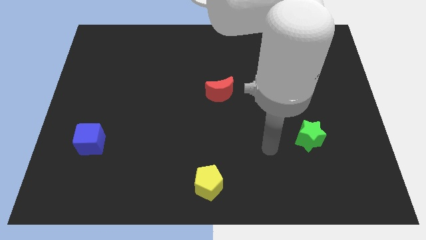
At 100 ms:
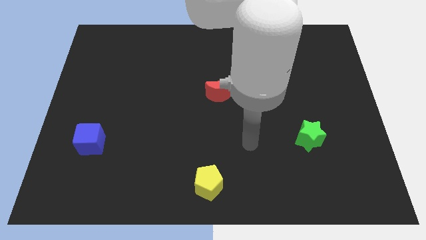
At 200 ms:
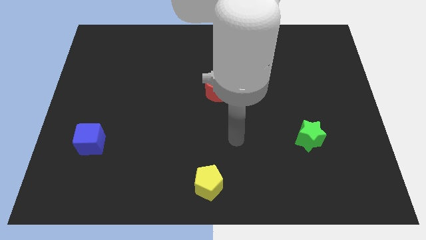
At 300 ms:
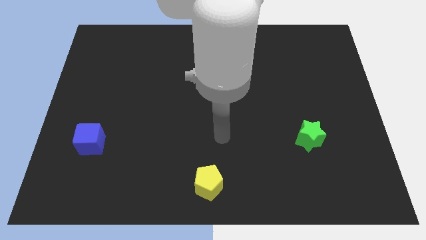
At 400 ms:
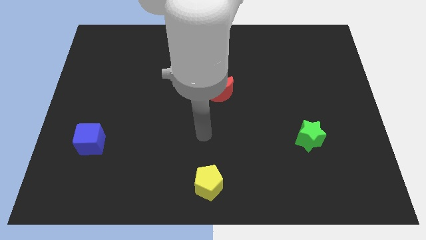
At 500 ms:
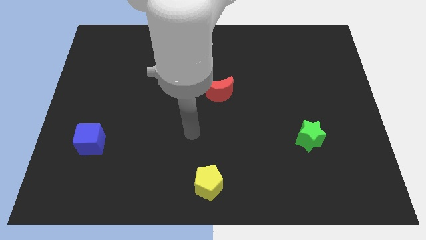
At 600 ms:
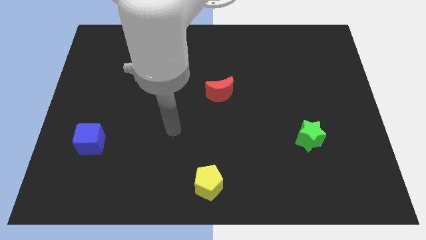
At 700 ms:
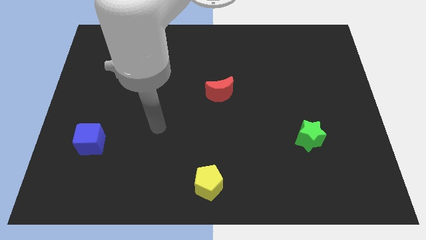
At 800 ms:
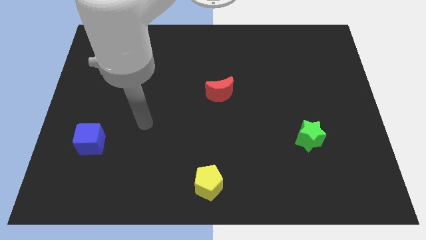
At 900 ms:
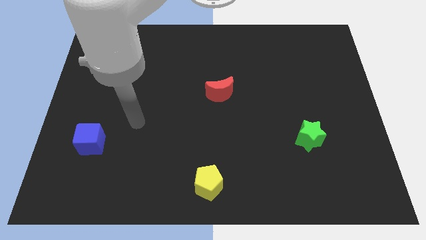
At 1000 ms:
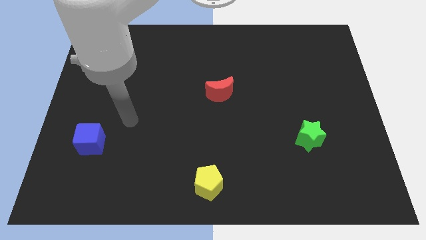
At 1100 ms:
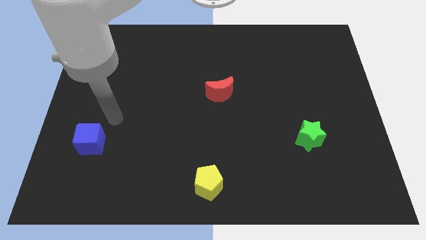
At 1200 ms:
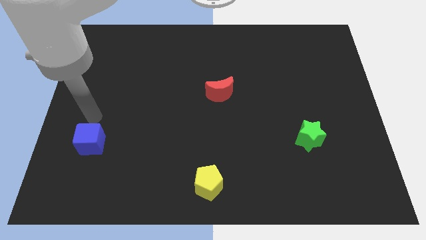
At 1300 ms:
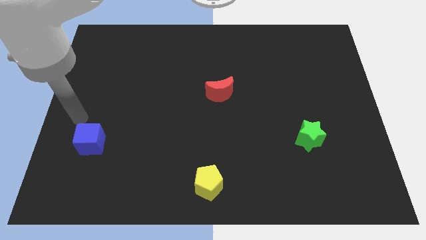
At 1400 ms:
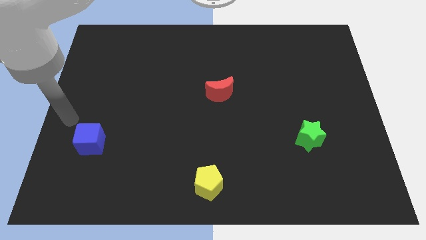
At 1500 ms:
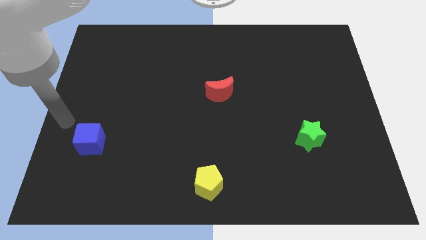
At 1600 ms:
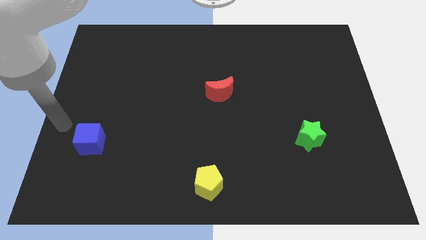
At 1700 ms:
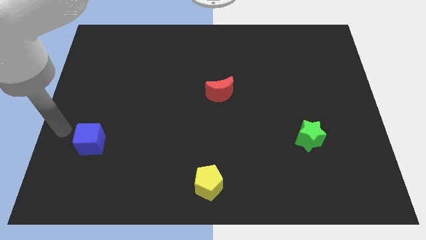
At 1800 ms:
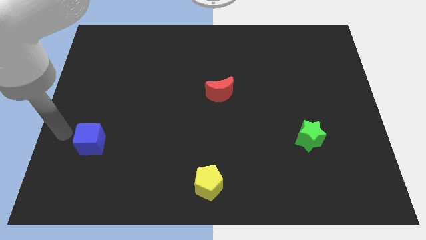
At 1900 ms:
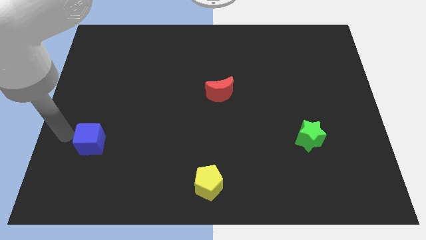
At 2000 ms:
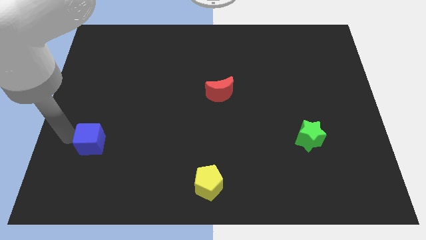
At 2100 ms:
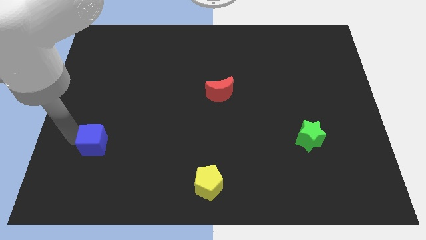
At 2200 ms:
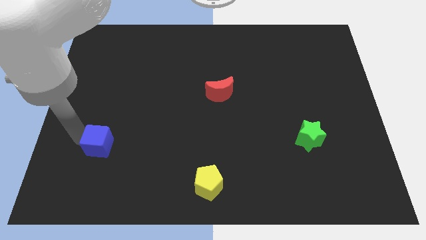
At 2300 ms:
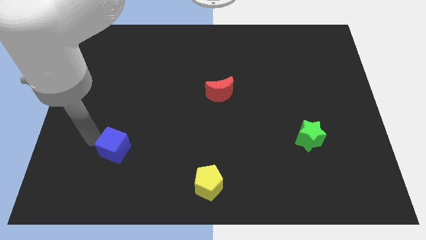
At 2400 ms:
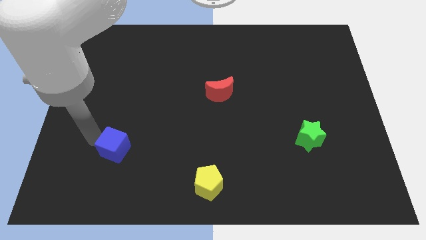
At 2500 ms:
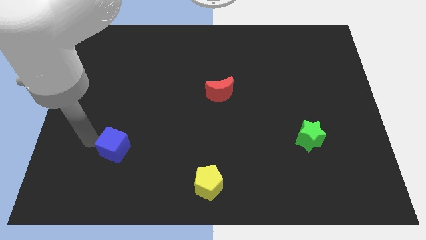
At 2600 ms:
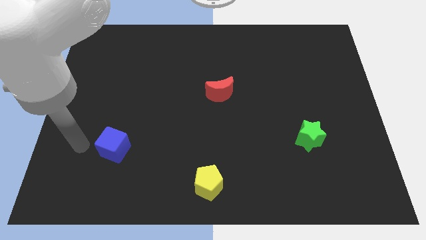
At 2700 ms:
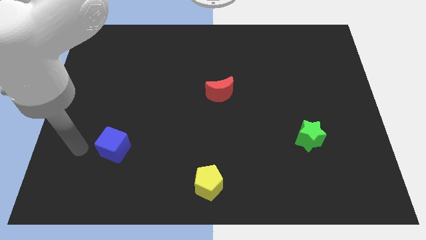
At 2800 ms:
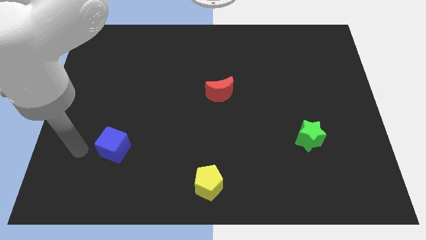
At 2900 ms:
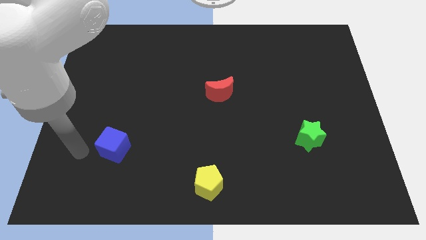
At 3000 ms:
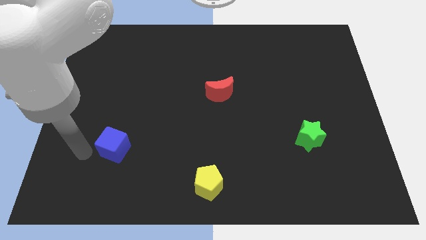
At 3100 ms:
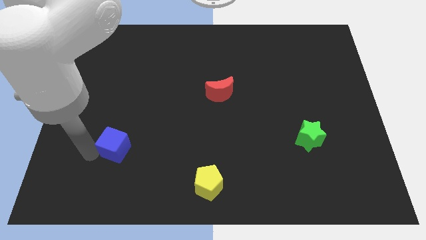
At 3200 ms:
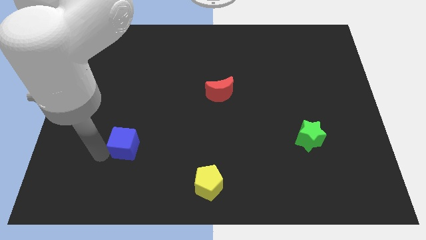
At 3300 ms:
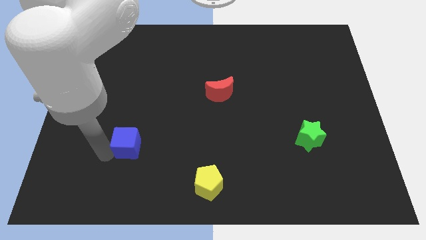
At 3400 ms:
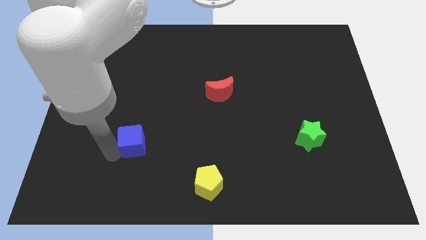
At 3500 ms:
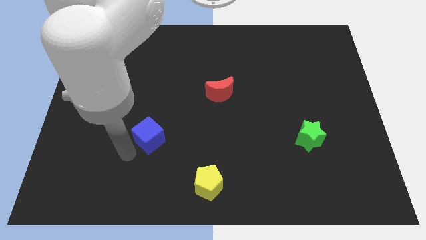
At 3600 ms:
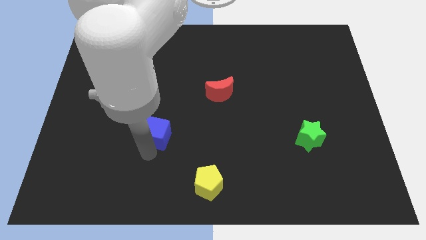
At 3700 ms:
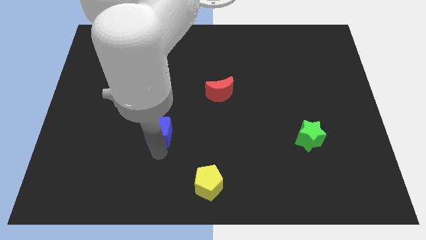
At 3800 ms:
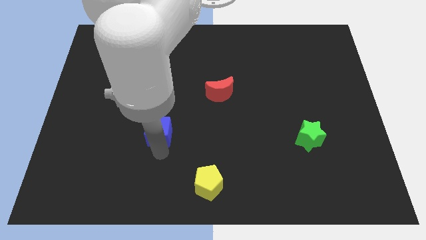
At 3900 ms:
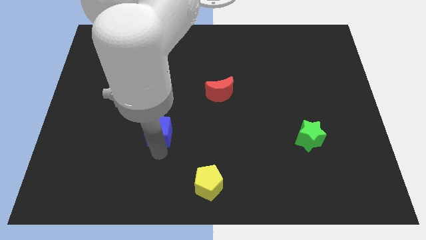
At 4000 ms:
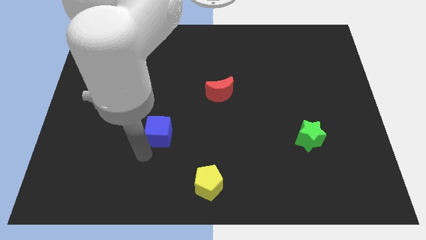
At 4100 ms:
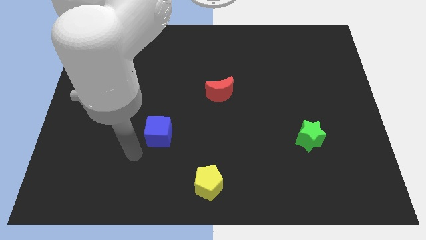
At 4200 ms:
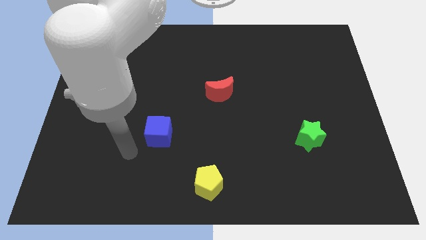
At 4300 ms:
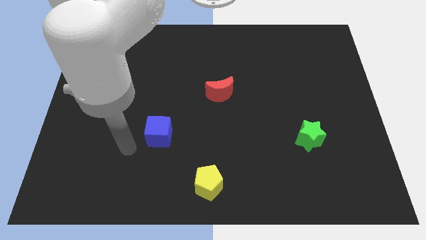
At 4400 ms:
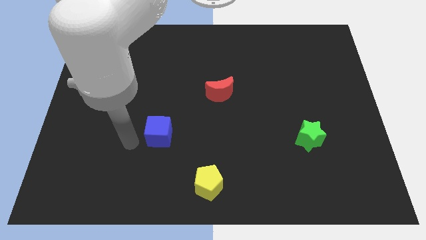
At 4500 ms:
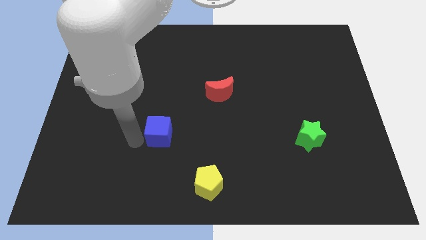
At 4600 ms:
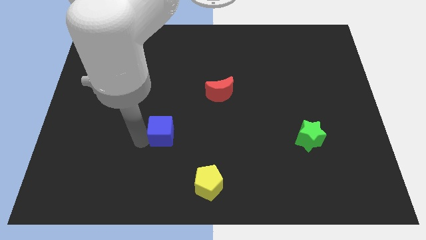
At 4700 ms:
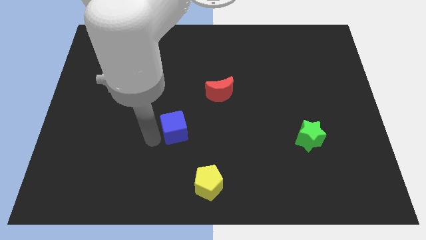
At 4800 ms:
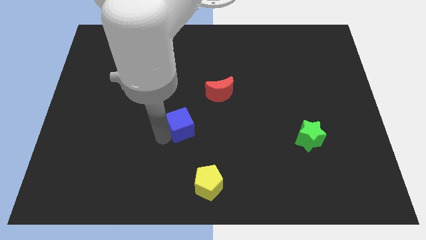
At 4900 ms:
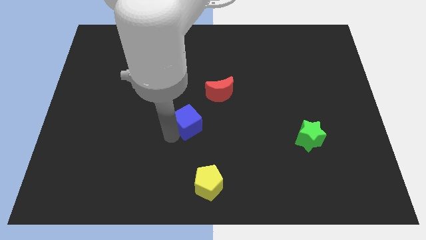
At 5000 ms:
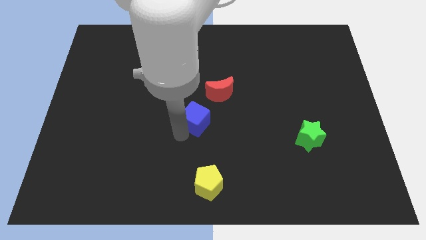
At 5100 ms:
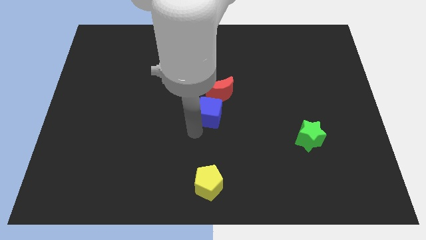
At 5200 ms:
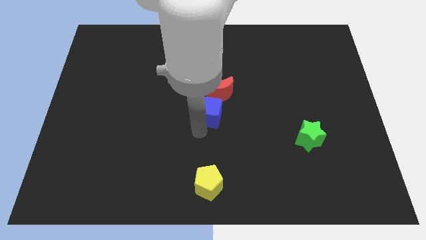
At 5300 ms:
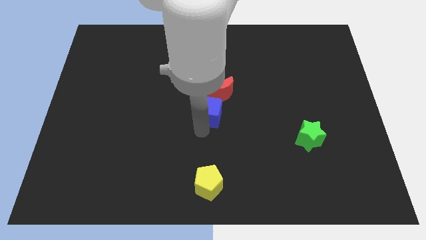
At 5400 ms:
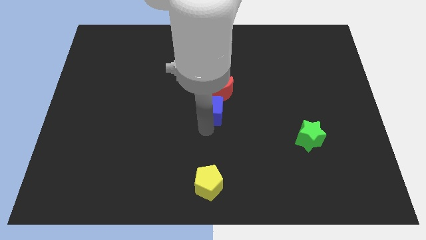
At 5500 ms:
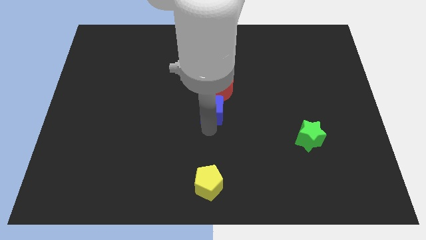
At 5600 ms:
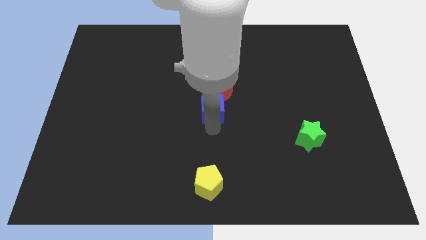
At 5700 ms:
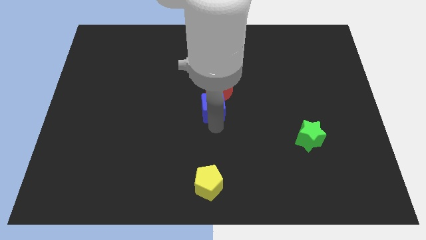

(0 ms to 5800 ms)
push the cube next to the moon

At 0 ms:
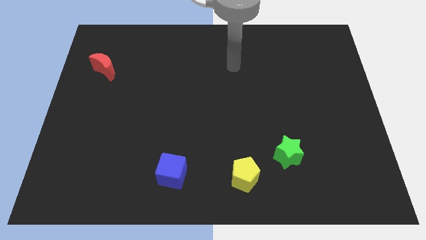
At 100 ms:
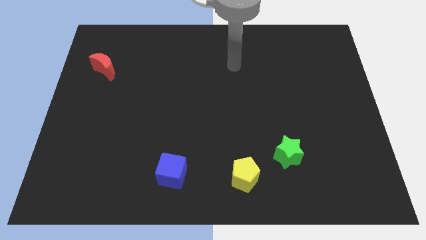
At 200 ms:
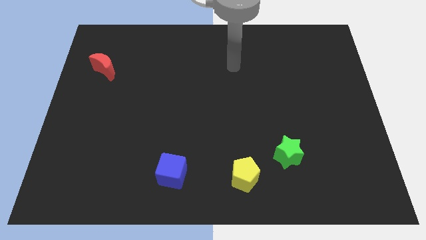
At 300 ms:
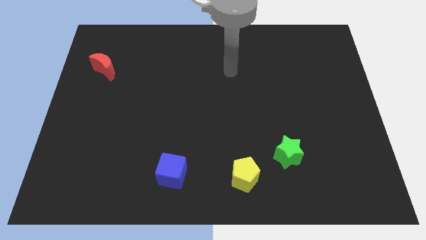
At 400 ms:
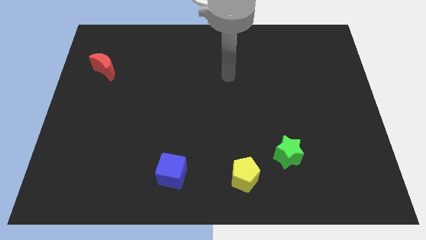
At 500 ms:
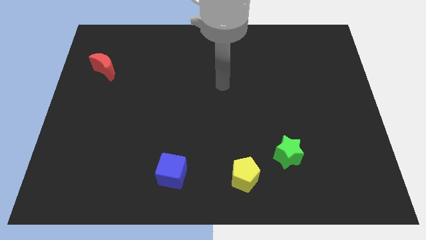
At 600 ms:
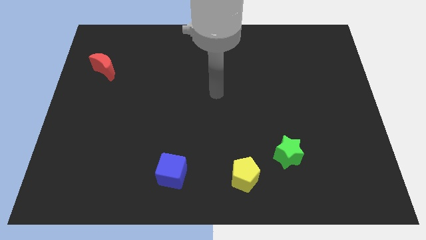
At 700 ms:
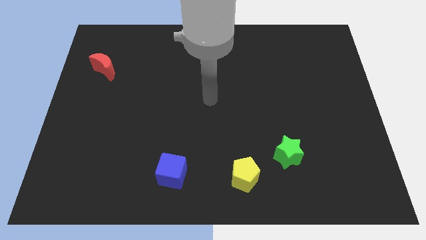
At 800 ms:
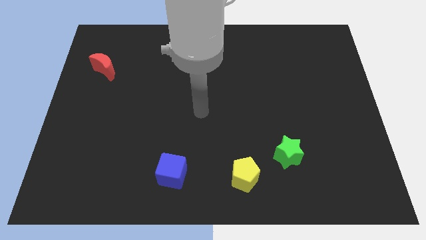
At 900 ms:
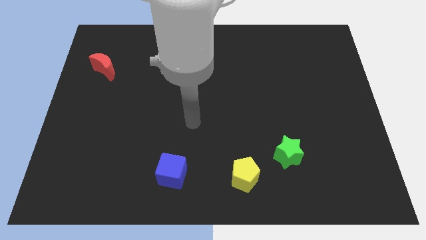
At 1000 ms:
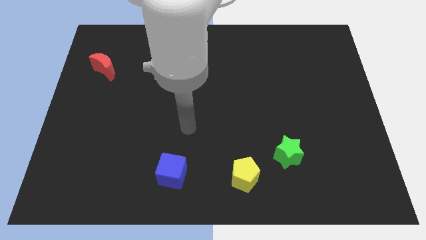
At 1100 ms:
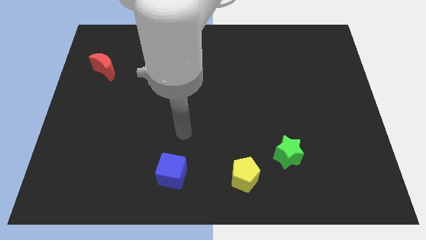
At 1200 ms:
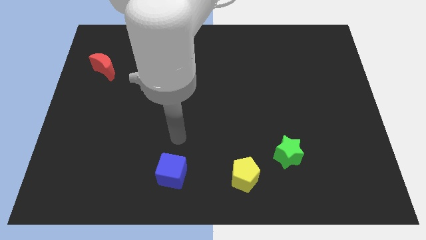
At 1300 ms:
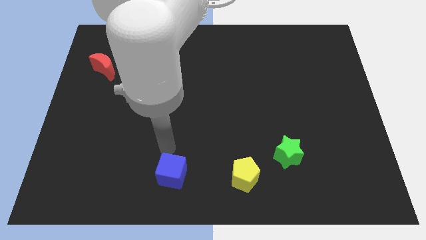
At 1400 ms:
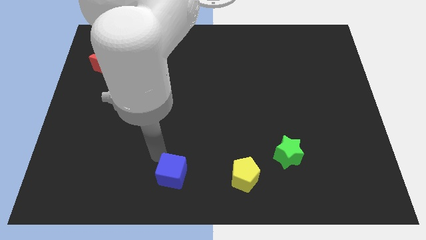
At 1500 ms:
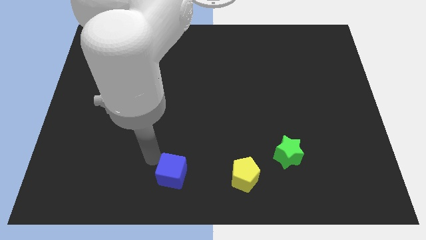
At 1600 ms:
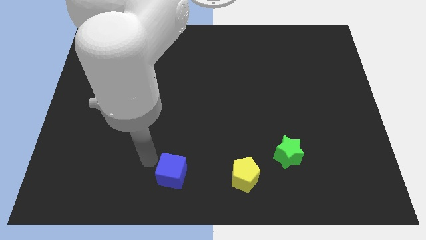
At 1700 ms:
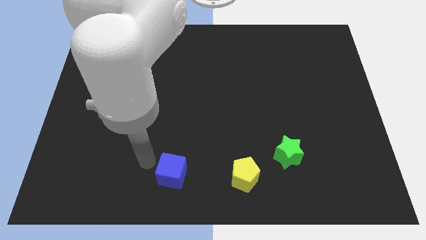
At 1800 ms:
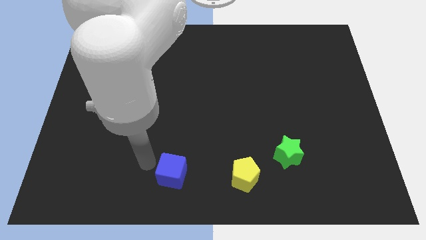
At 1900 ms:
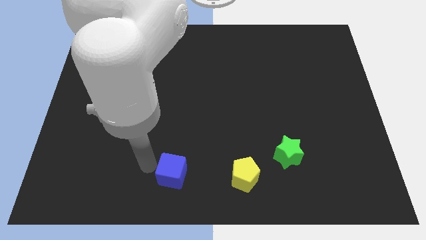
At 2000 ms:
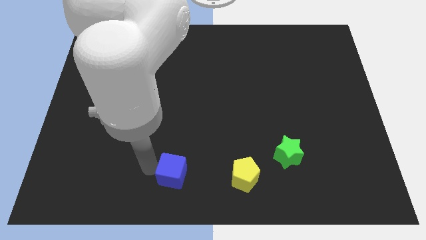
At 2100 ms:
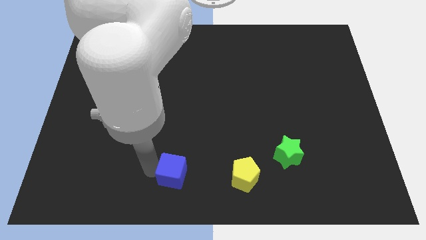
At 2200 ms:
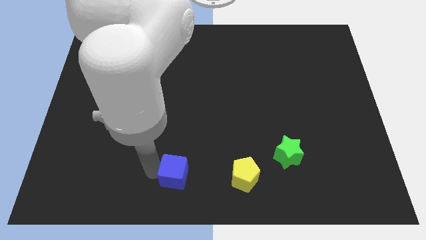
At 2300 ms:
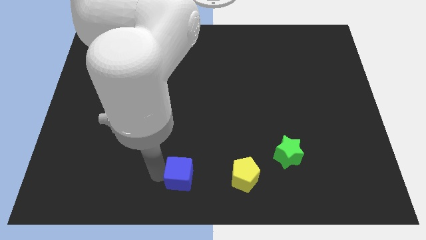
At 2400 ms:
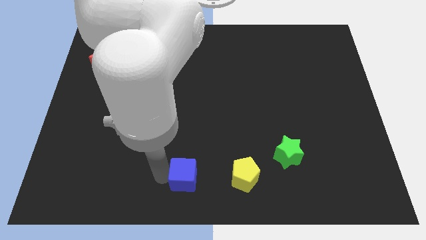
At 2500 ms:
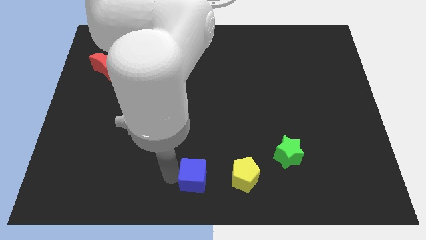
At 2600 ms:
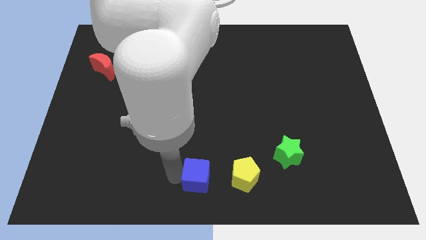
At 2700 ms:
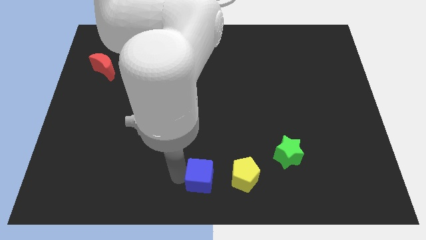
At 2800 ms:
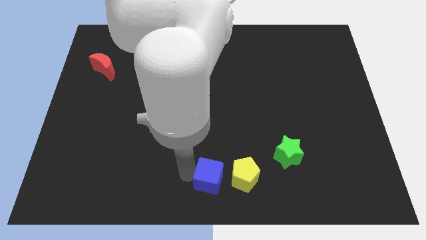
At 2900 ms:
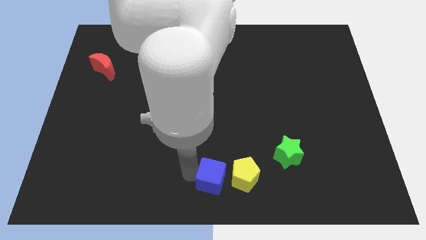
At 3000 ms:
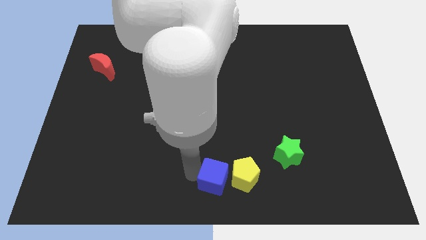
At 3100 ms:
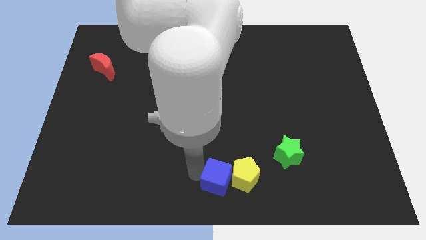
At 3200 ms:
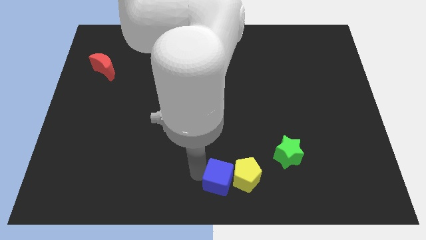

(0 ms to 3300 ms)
move the cube towards the yellow block
